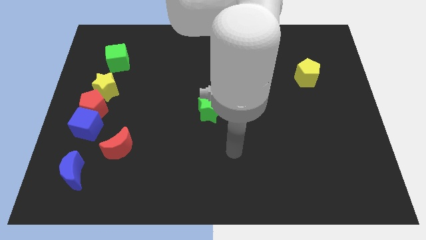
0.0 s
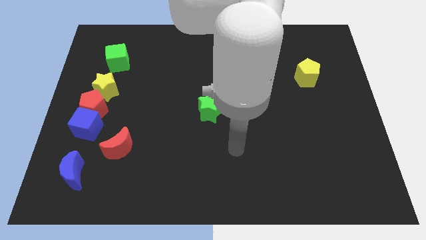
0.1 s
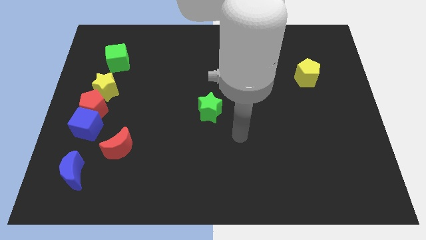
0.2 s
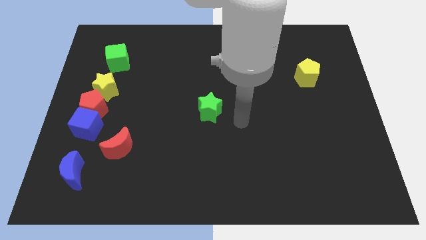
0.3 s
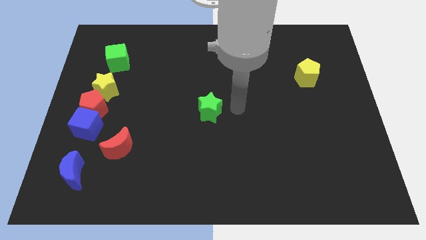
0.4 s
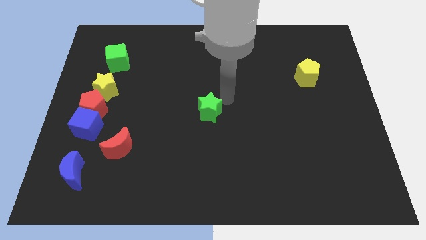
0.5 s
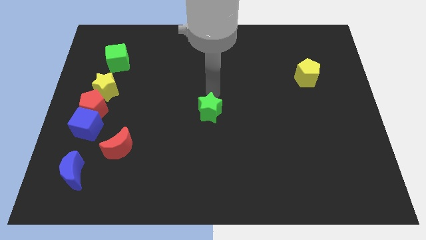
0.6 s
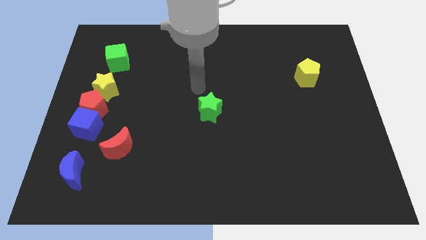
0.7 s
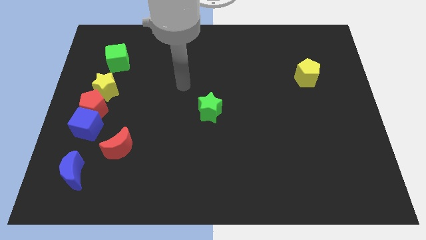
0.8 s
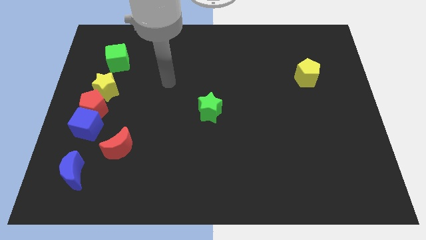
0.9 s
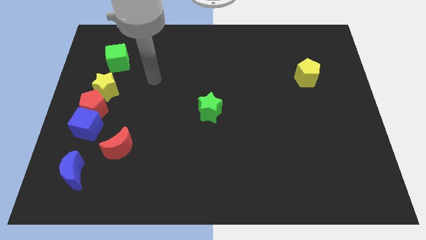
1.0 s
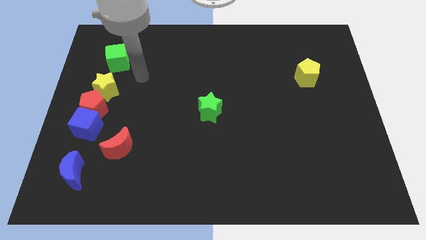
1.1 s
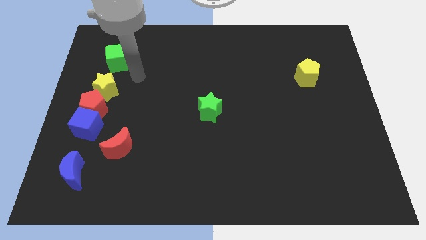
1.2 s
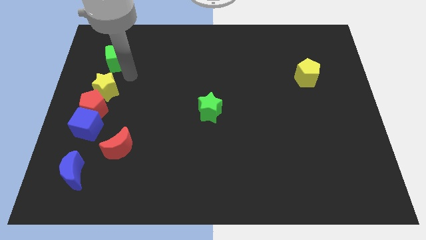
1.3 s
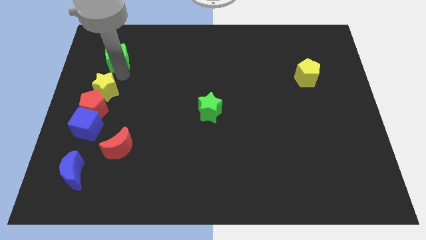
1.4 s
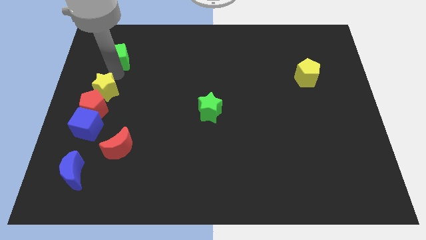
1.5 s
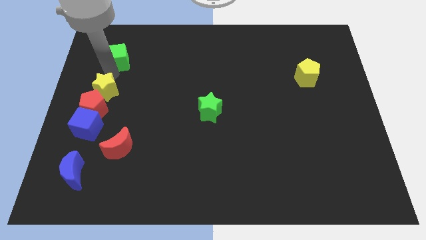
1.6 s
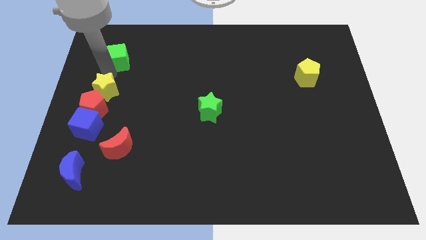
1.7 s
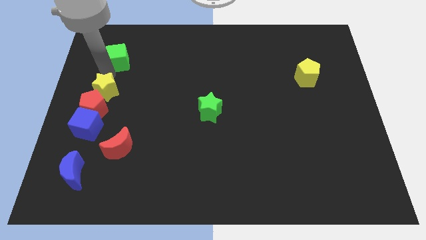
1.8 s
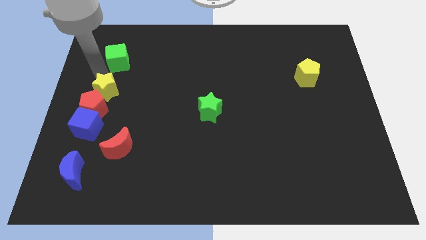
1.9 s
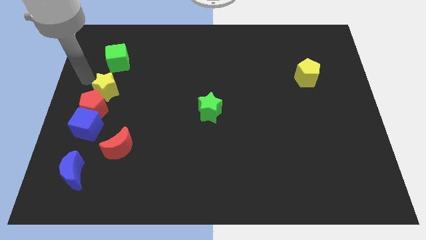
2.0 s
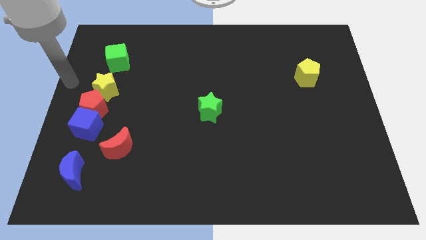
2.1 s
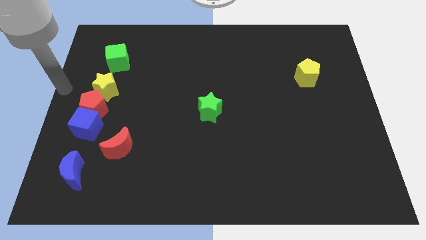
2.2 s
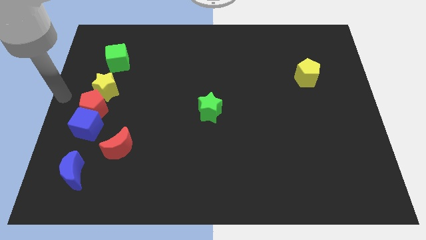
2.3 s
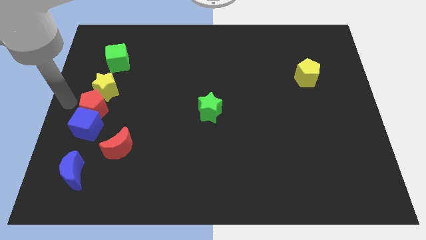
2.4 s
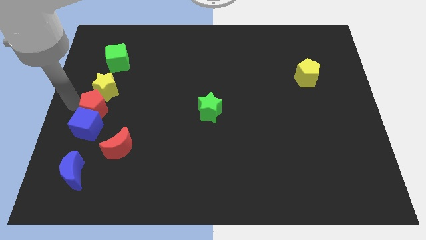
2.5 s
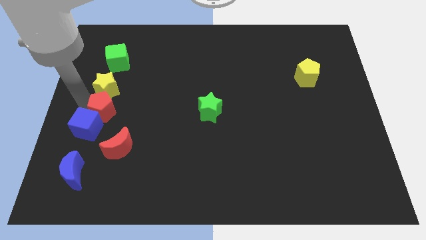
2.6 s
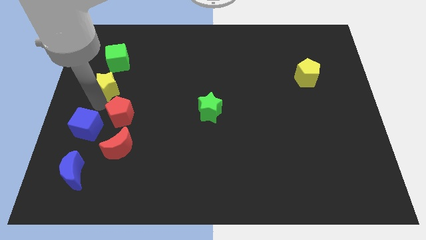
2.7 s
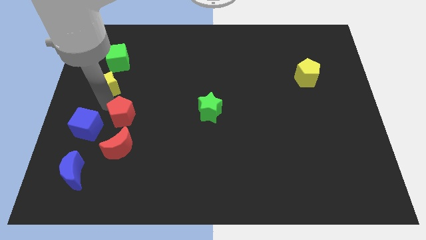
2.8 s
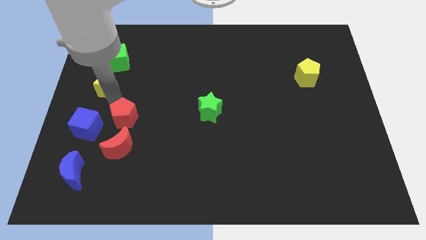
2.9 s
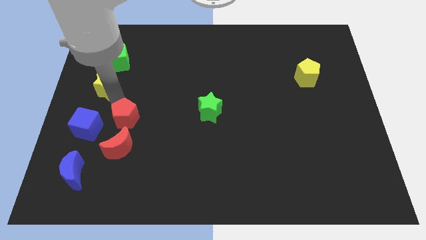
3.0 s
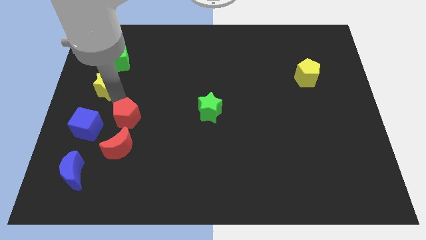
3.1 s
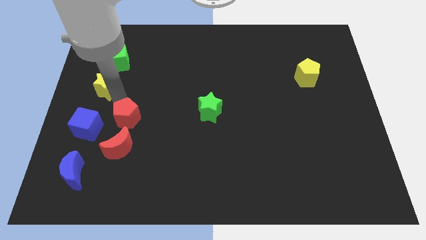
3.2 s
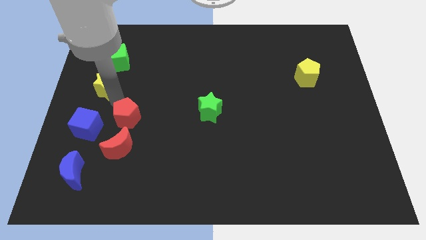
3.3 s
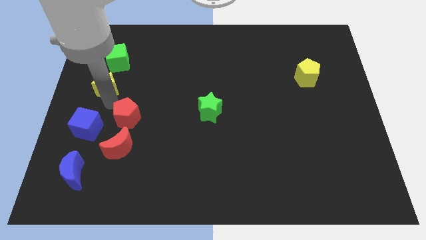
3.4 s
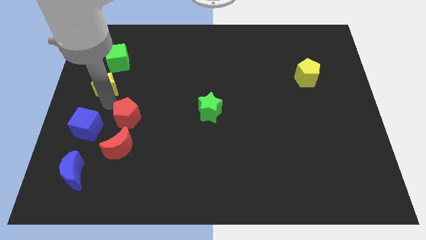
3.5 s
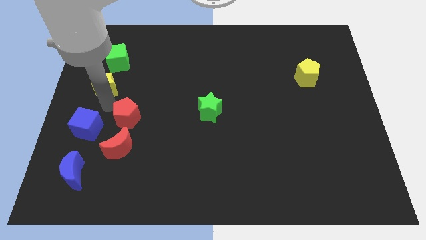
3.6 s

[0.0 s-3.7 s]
place the red pentagon diagonal to the left of the green star

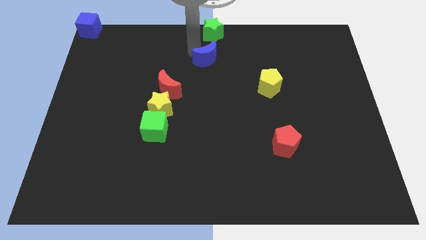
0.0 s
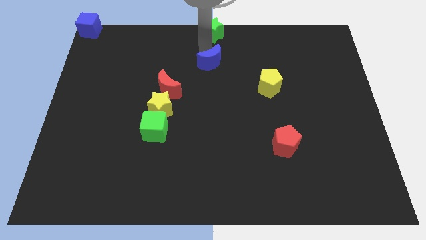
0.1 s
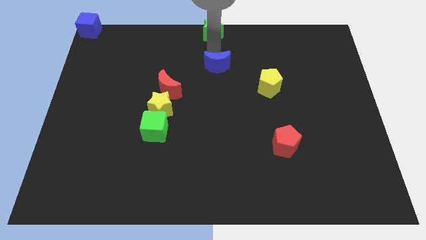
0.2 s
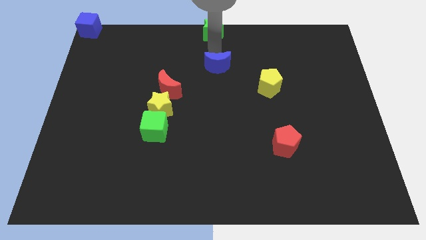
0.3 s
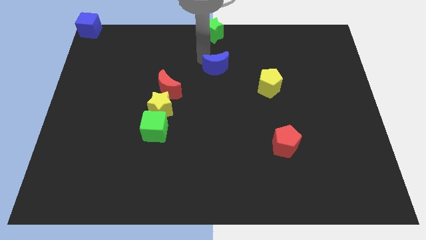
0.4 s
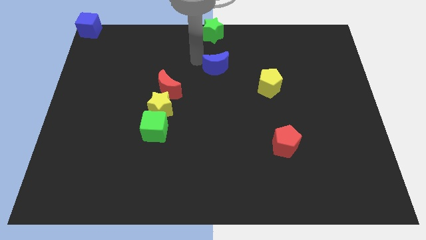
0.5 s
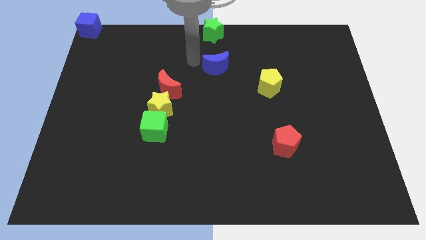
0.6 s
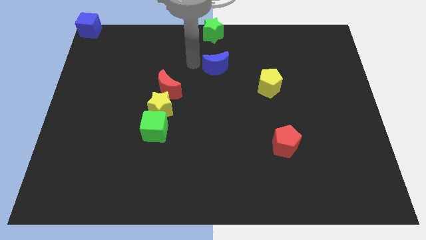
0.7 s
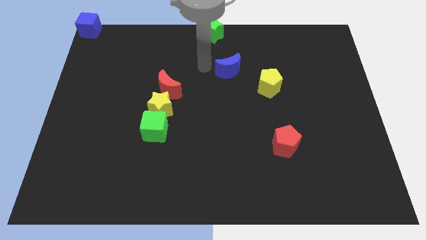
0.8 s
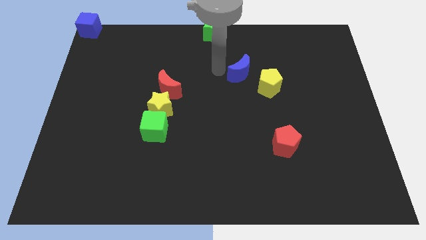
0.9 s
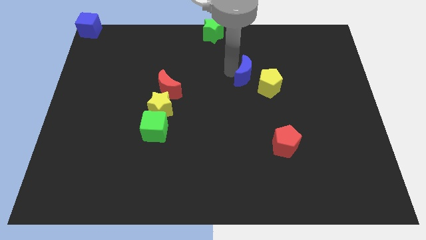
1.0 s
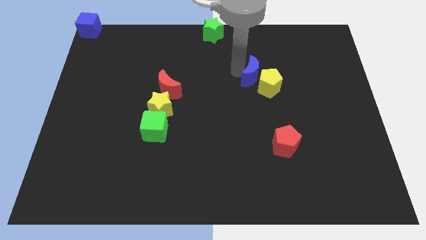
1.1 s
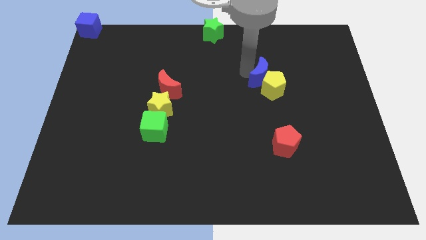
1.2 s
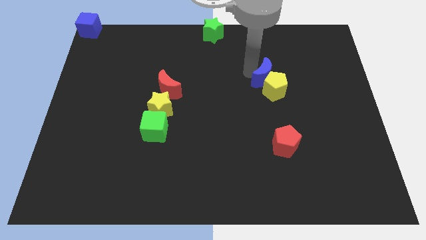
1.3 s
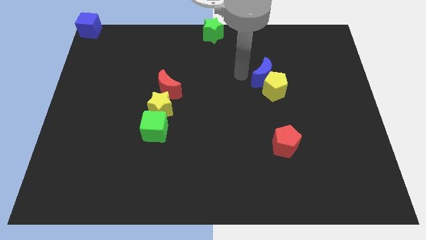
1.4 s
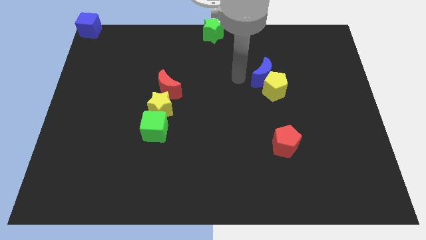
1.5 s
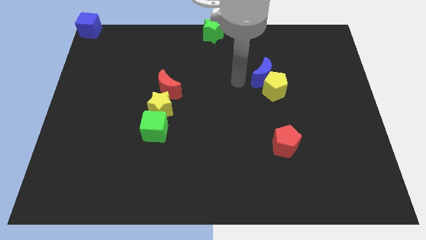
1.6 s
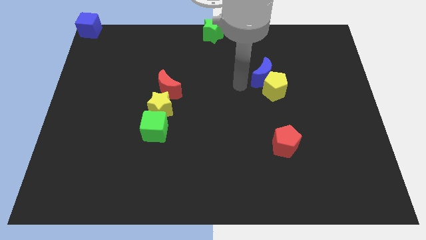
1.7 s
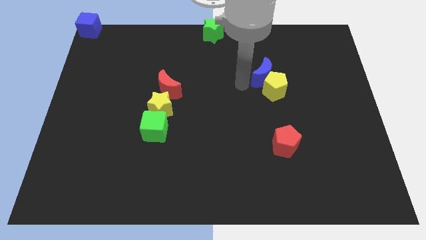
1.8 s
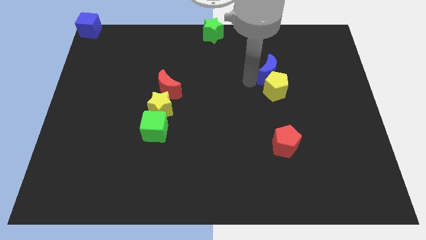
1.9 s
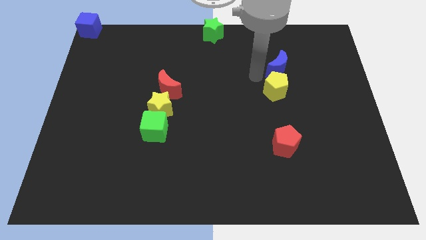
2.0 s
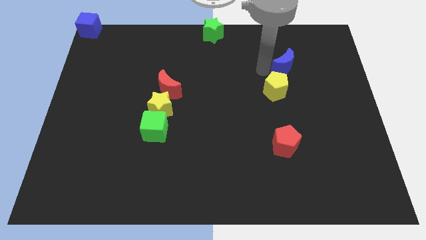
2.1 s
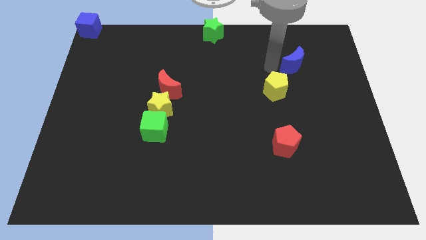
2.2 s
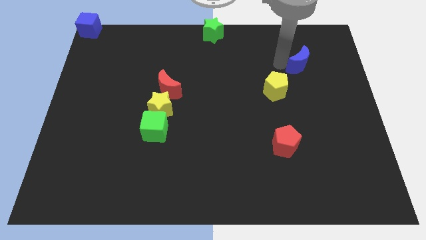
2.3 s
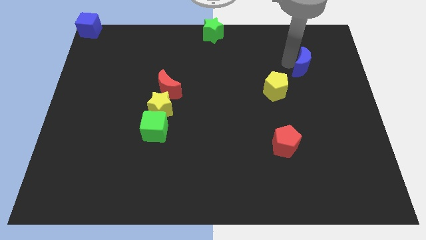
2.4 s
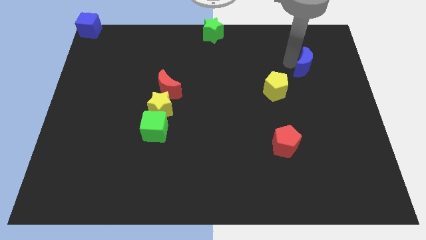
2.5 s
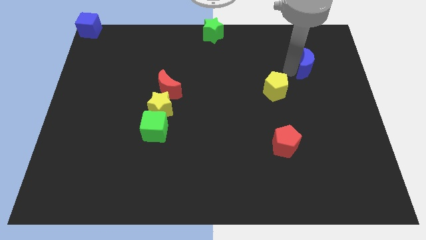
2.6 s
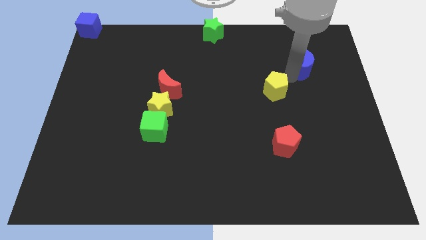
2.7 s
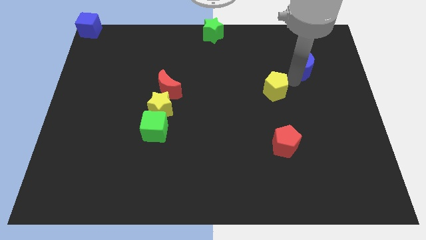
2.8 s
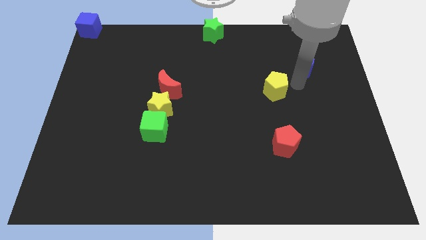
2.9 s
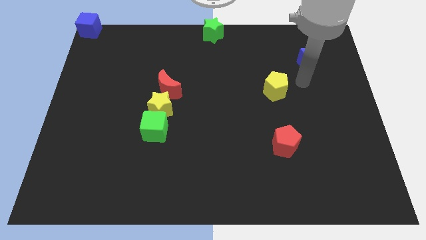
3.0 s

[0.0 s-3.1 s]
place the blue crescent at the top right of the yellow pentagon

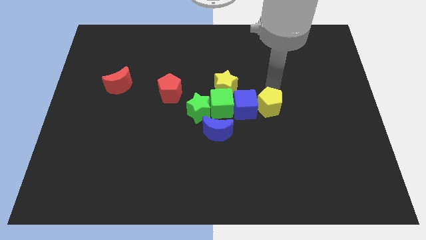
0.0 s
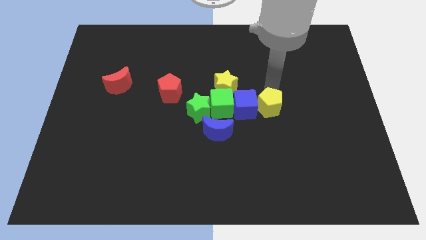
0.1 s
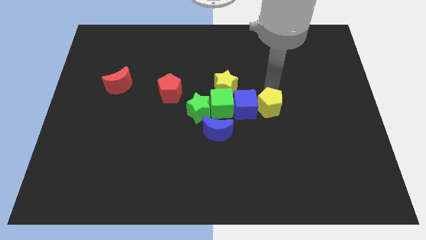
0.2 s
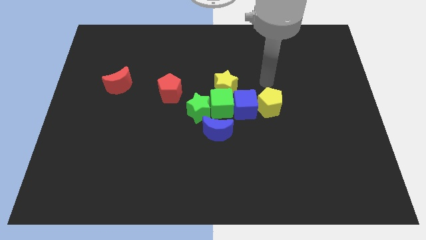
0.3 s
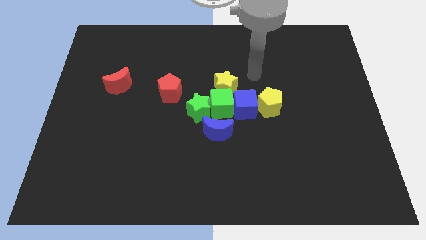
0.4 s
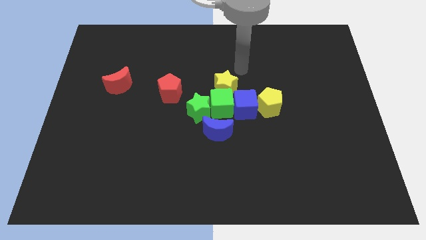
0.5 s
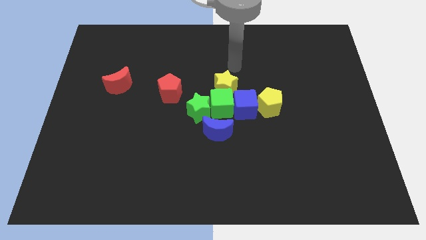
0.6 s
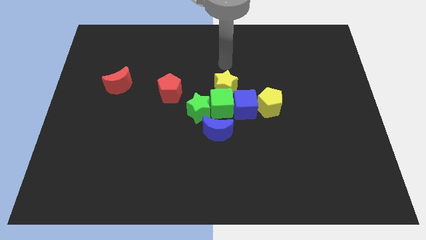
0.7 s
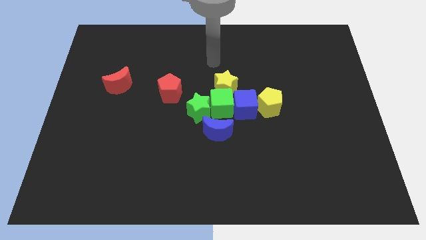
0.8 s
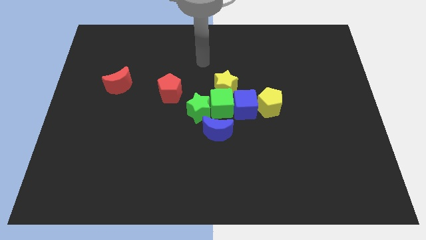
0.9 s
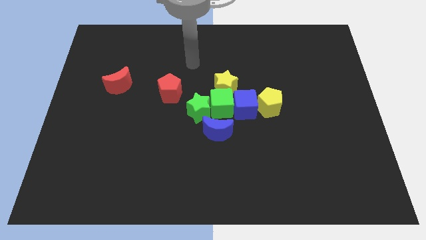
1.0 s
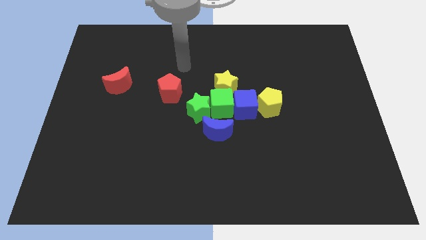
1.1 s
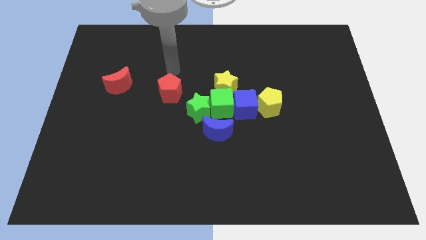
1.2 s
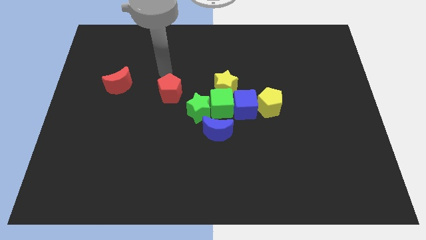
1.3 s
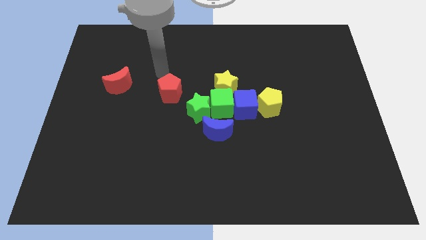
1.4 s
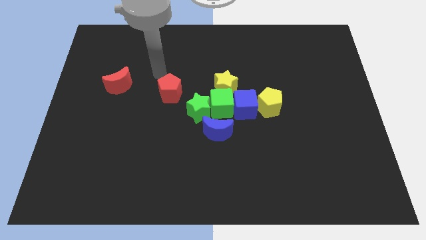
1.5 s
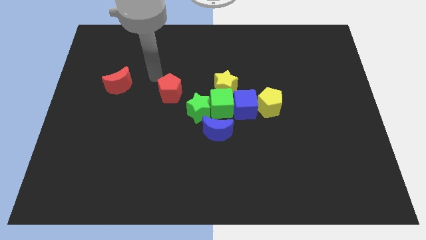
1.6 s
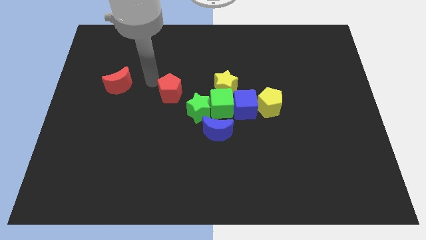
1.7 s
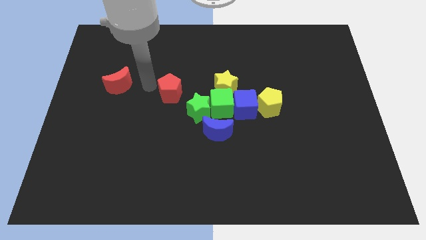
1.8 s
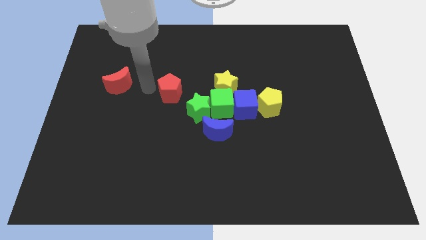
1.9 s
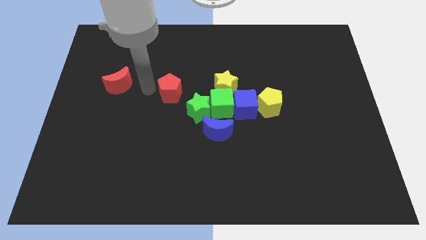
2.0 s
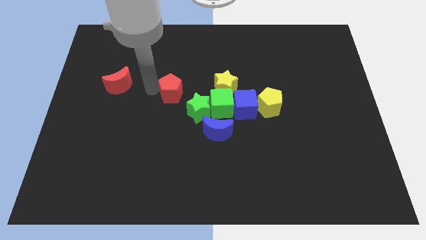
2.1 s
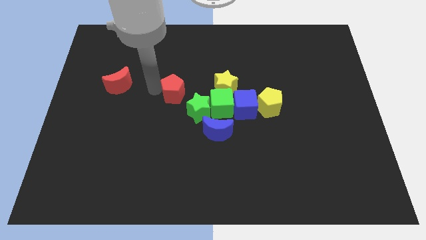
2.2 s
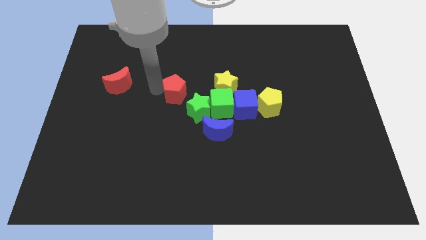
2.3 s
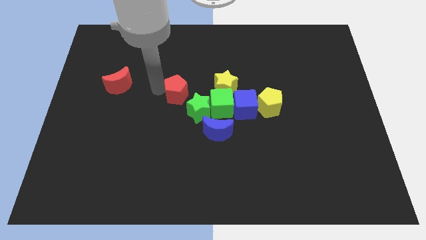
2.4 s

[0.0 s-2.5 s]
push the red pentagon slightly to the right
